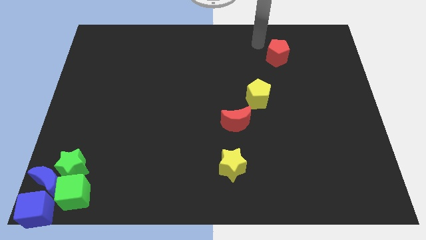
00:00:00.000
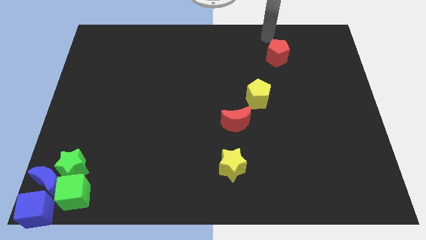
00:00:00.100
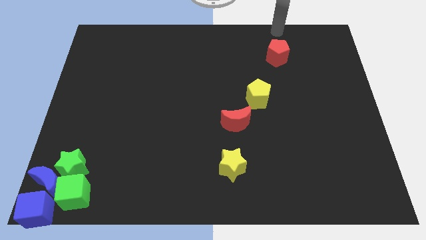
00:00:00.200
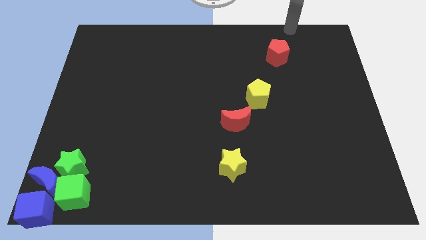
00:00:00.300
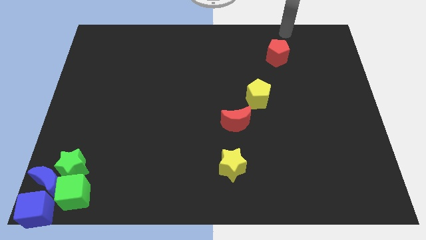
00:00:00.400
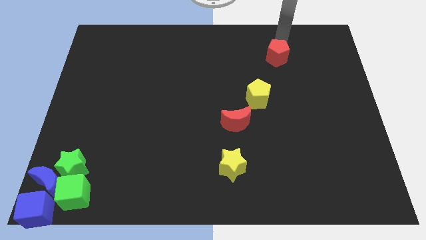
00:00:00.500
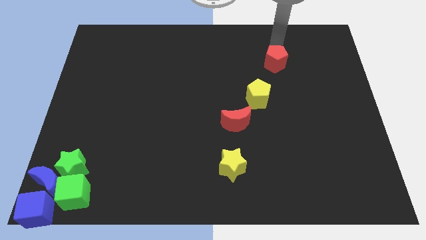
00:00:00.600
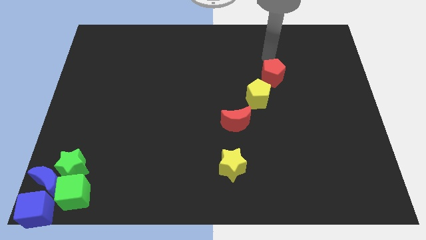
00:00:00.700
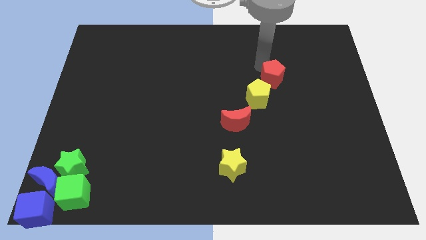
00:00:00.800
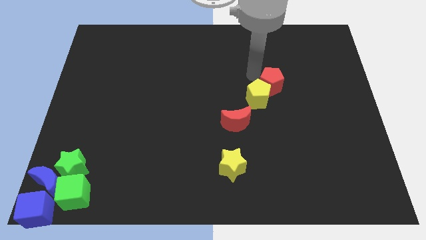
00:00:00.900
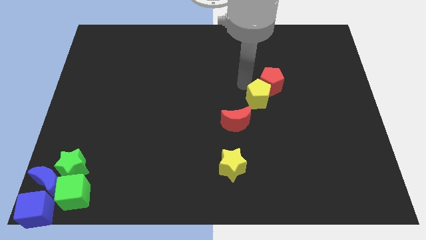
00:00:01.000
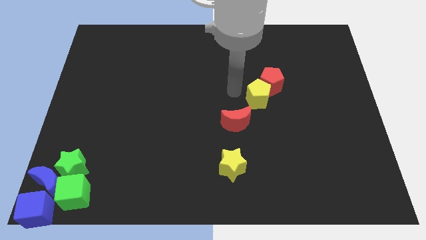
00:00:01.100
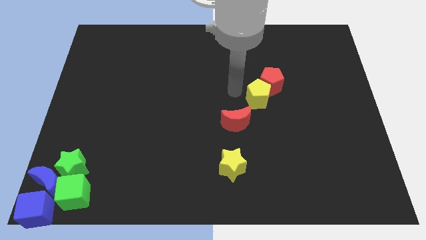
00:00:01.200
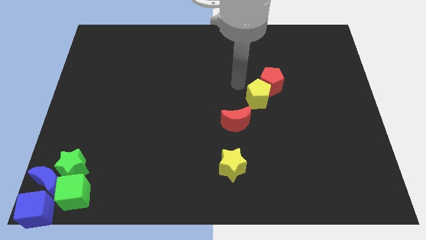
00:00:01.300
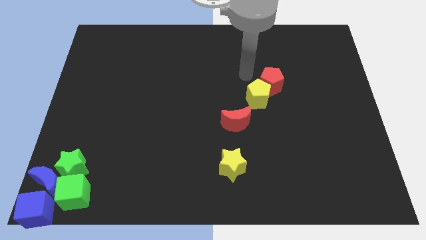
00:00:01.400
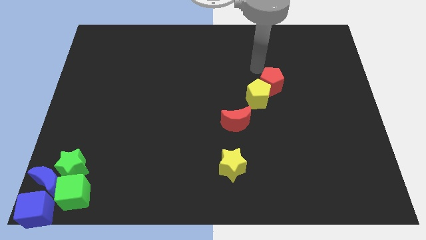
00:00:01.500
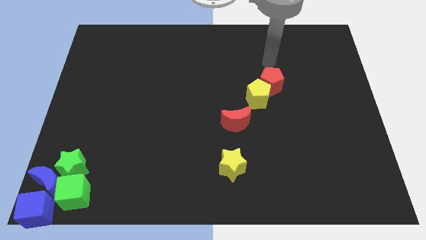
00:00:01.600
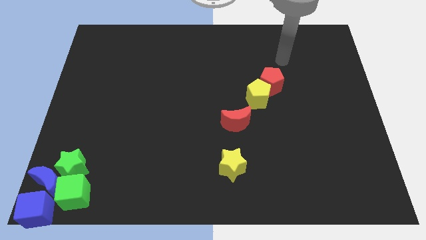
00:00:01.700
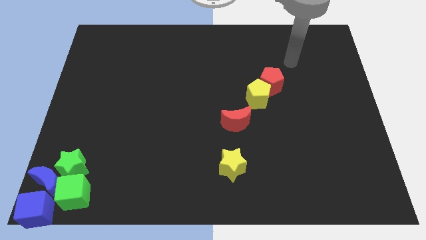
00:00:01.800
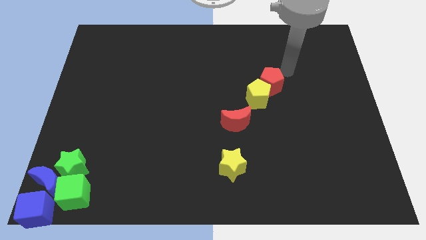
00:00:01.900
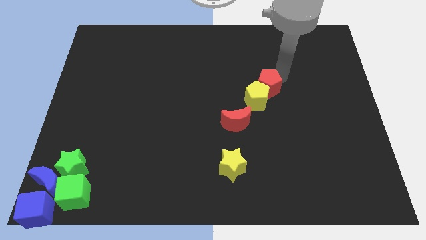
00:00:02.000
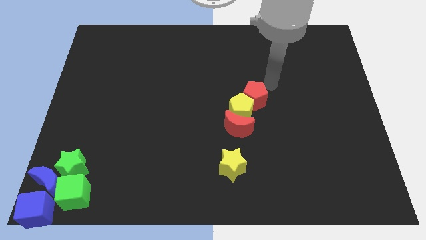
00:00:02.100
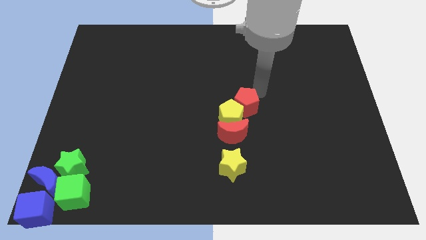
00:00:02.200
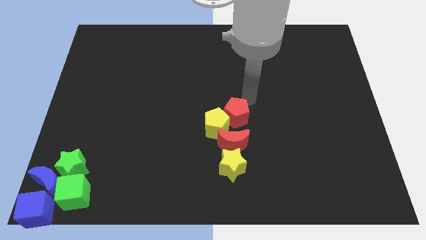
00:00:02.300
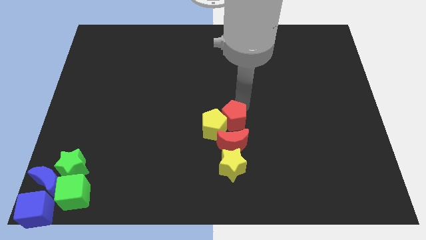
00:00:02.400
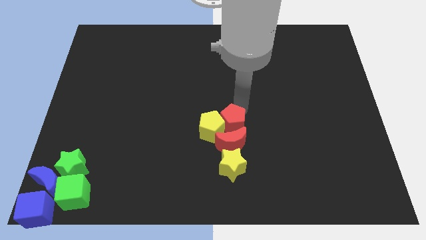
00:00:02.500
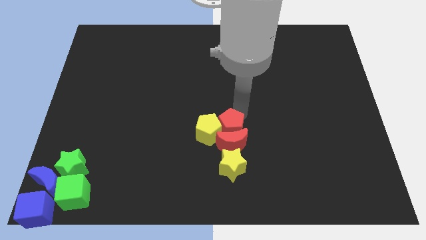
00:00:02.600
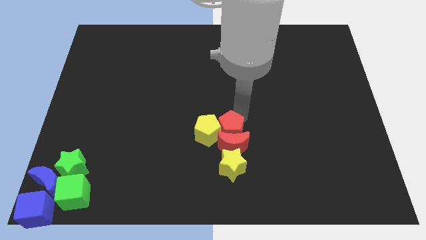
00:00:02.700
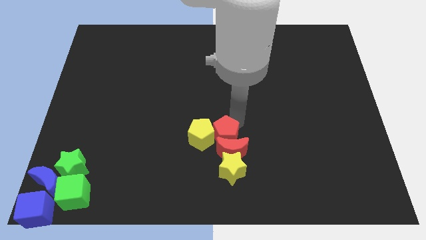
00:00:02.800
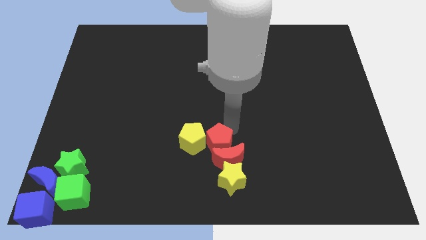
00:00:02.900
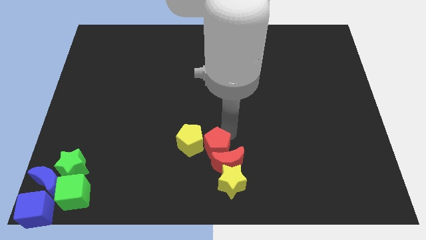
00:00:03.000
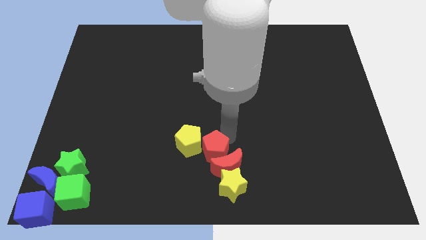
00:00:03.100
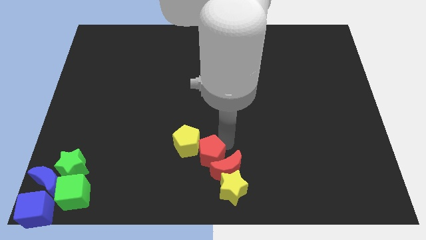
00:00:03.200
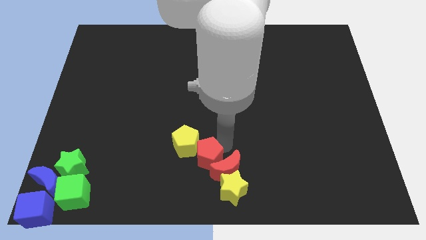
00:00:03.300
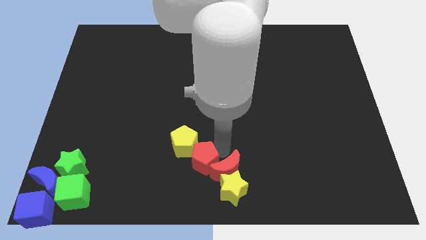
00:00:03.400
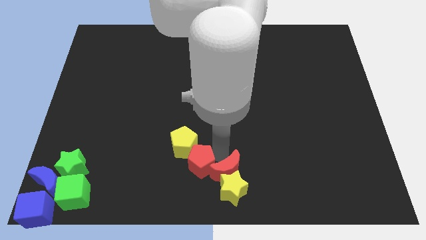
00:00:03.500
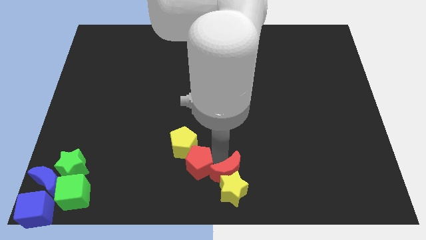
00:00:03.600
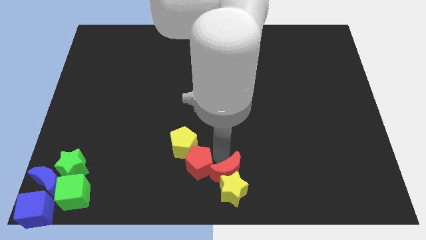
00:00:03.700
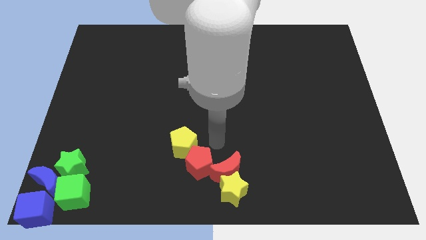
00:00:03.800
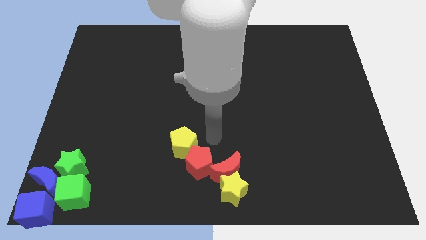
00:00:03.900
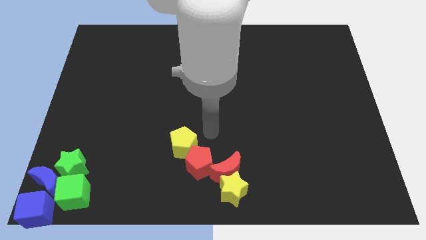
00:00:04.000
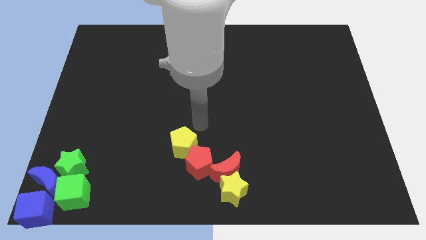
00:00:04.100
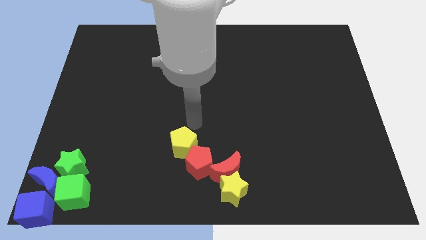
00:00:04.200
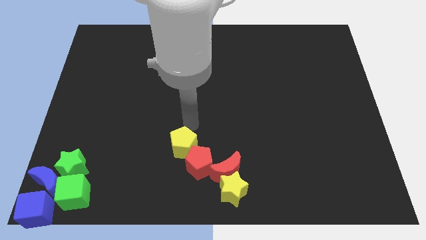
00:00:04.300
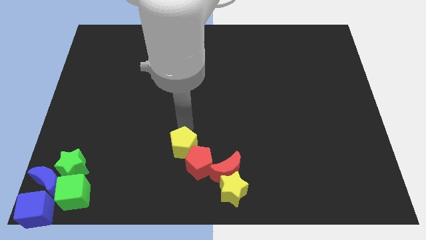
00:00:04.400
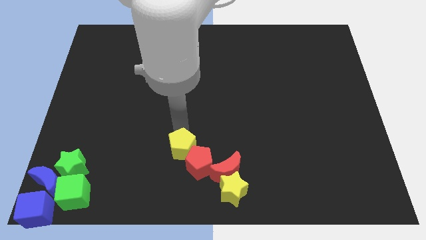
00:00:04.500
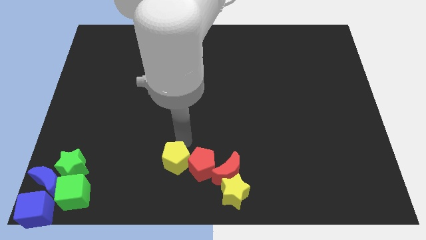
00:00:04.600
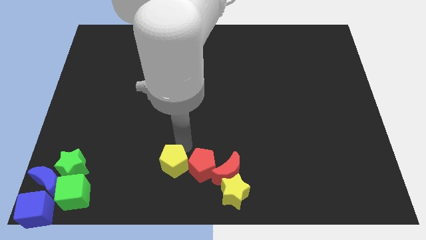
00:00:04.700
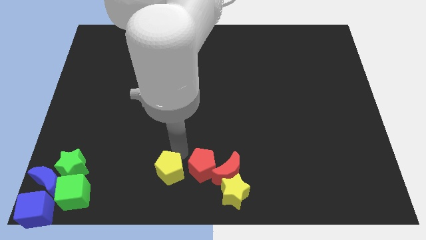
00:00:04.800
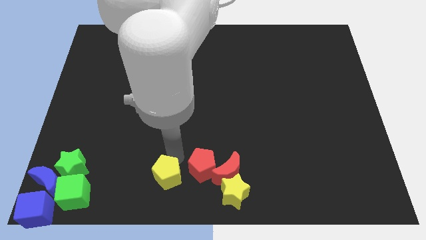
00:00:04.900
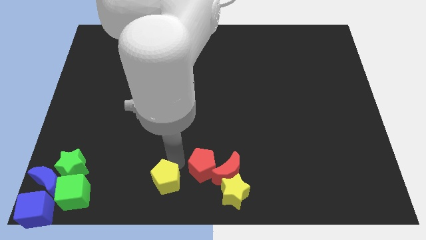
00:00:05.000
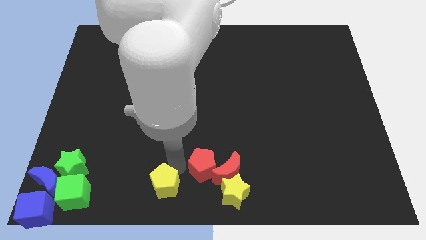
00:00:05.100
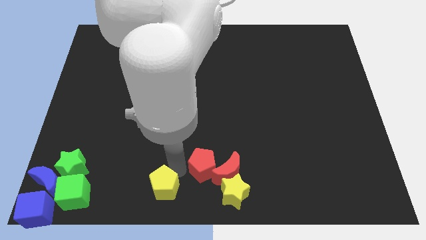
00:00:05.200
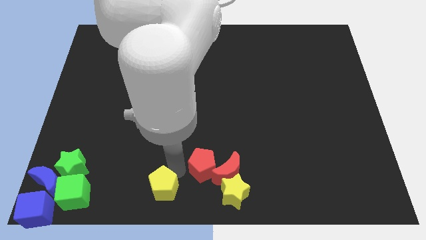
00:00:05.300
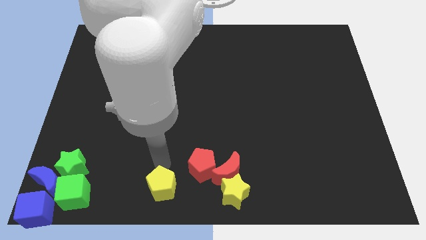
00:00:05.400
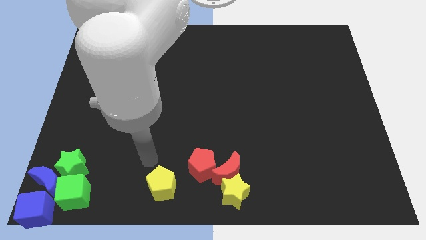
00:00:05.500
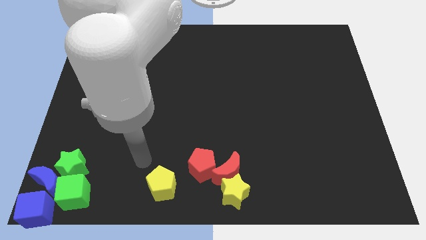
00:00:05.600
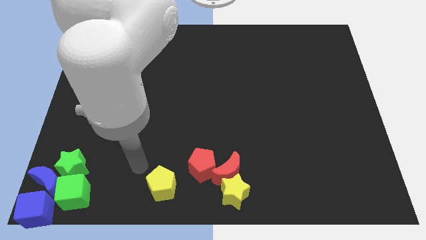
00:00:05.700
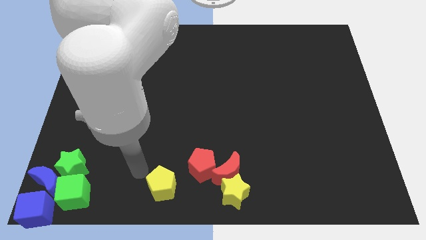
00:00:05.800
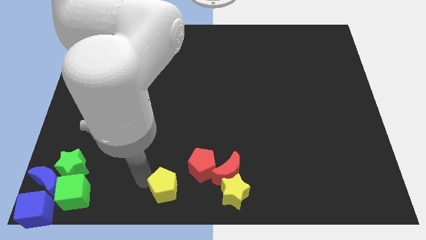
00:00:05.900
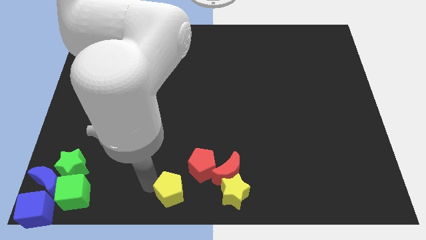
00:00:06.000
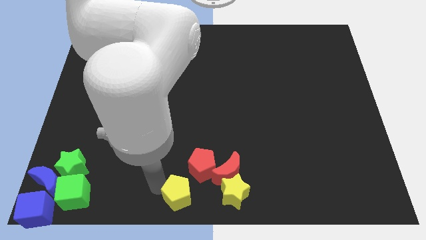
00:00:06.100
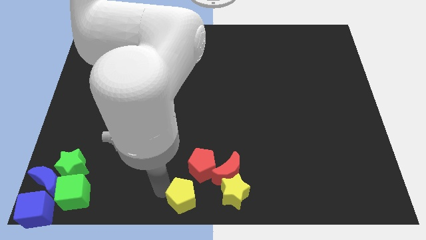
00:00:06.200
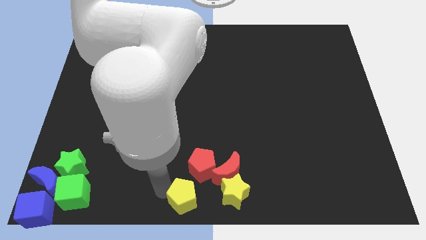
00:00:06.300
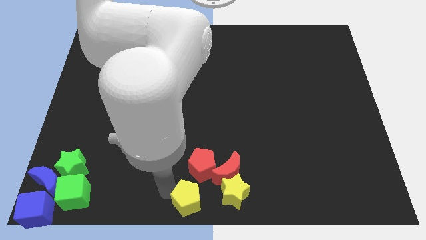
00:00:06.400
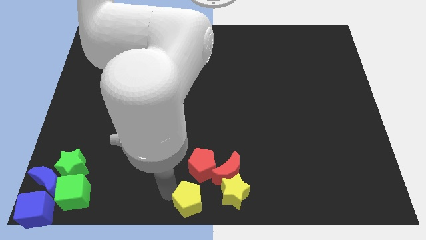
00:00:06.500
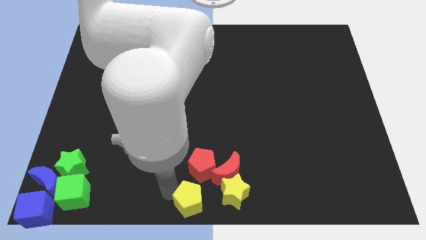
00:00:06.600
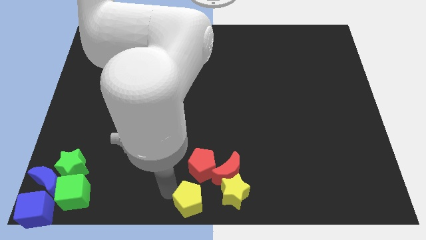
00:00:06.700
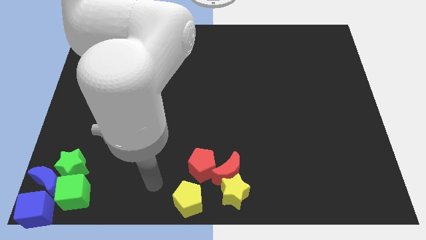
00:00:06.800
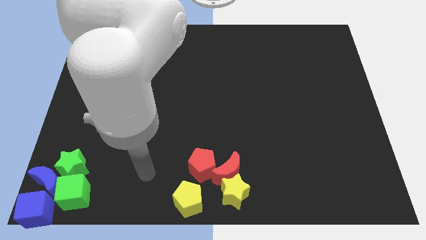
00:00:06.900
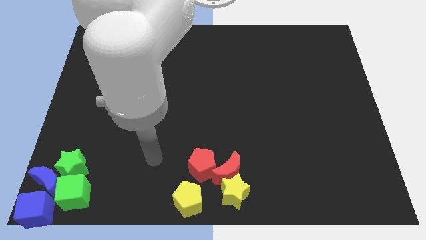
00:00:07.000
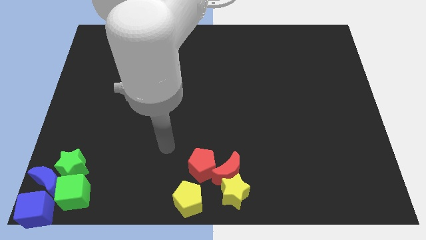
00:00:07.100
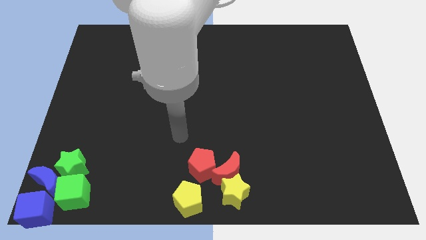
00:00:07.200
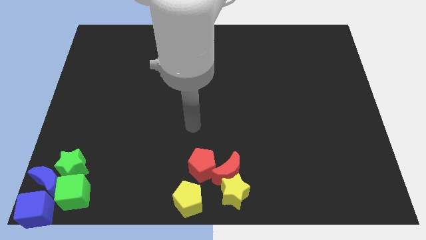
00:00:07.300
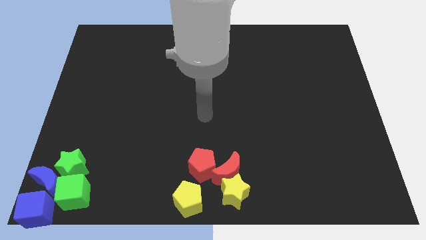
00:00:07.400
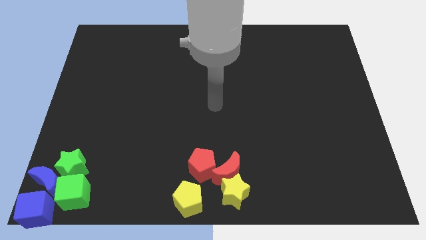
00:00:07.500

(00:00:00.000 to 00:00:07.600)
slide the red and yellow blocks to the bottom center

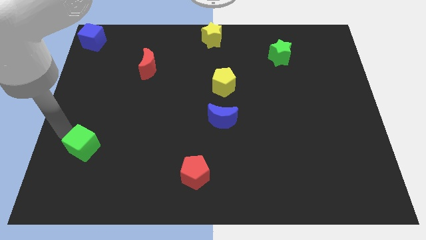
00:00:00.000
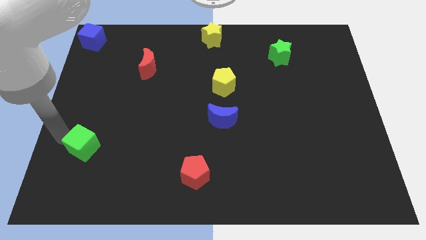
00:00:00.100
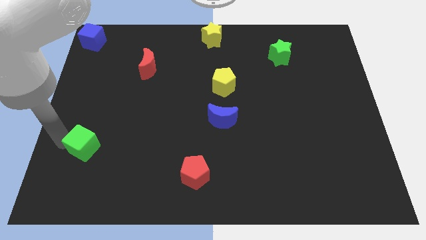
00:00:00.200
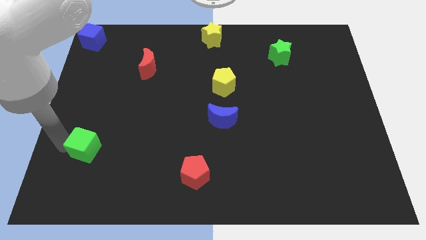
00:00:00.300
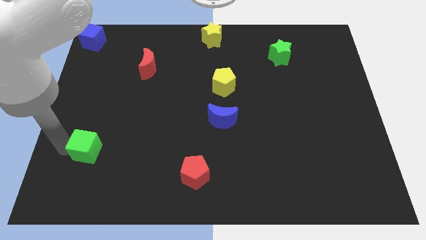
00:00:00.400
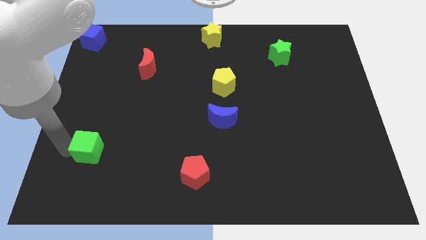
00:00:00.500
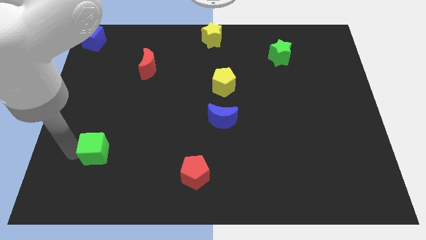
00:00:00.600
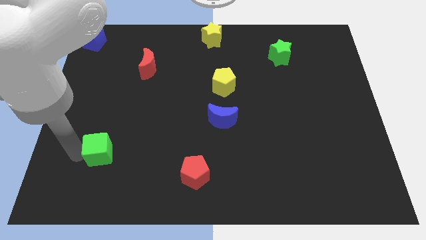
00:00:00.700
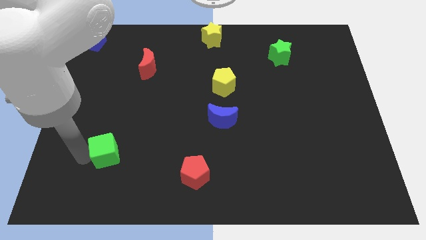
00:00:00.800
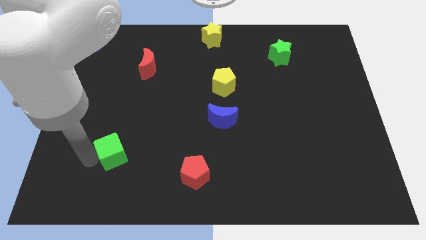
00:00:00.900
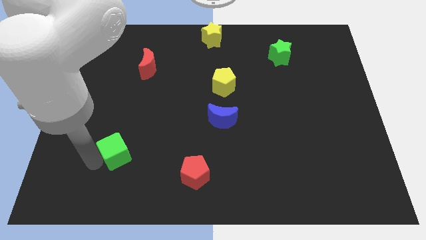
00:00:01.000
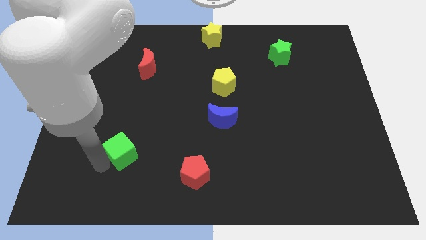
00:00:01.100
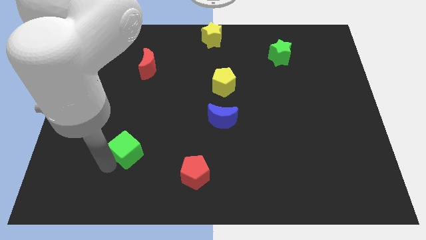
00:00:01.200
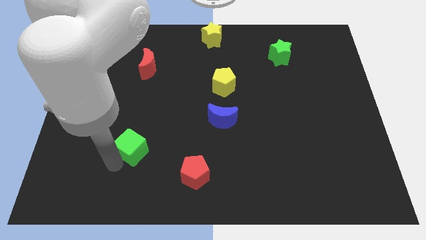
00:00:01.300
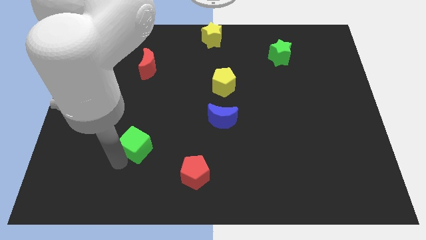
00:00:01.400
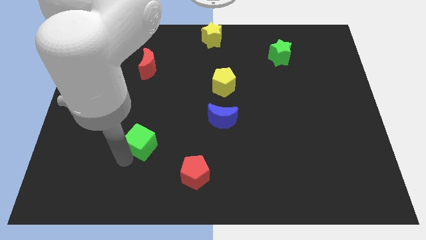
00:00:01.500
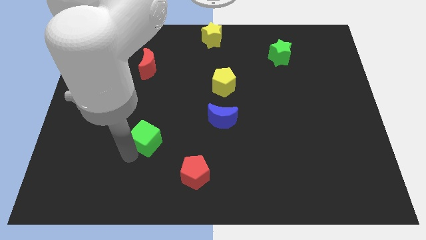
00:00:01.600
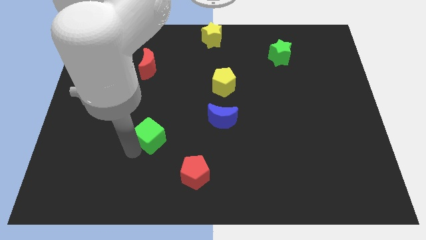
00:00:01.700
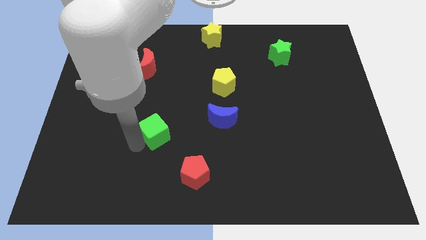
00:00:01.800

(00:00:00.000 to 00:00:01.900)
push the green cube close to the blue moon
